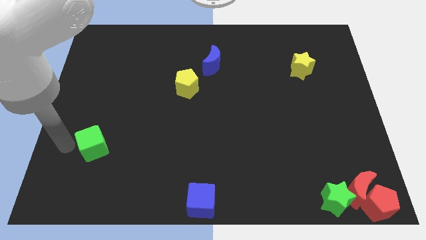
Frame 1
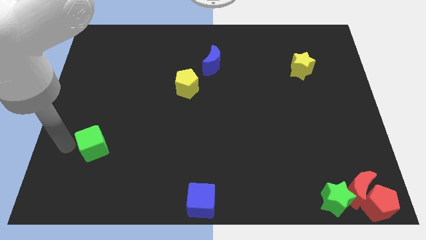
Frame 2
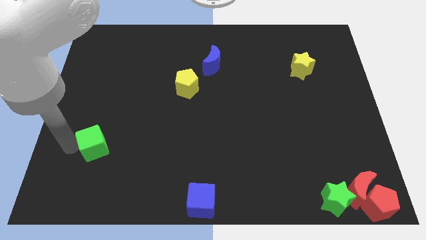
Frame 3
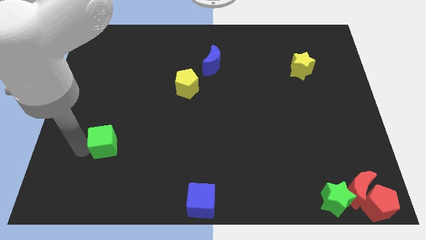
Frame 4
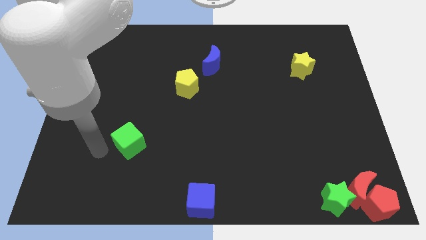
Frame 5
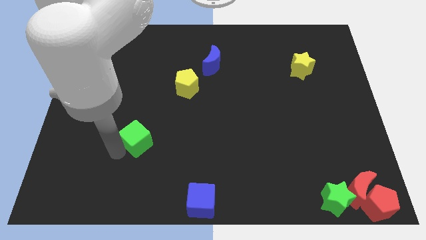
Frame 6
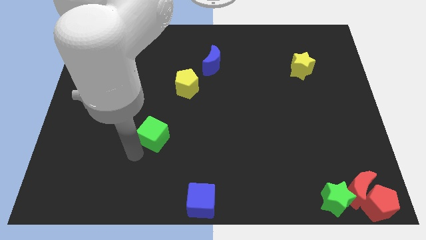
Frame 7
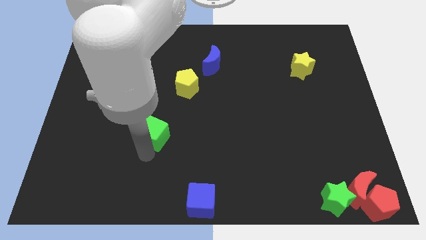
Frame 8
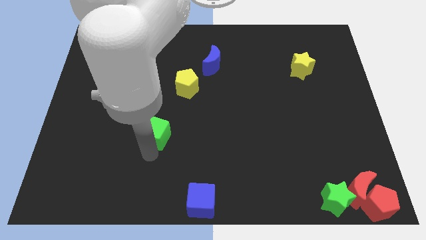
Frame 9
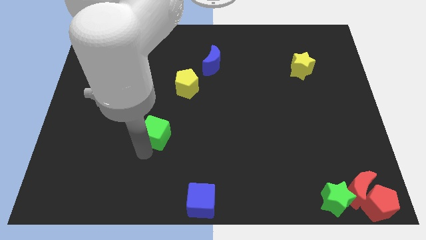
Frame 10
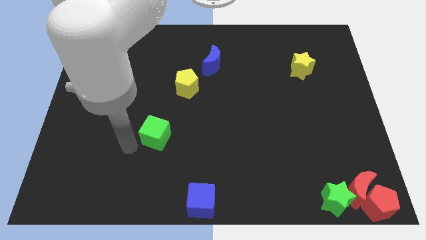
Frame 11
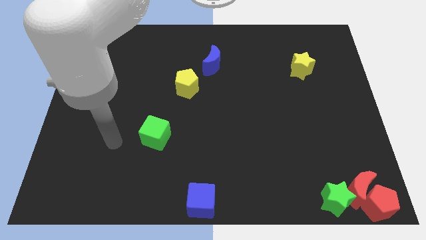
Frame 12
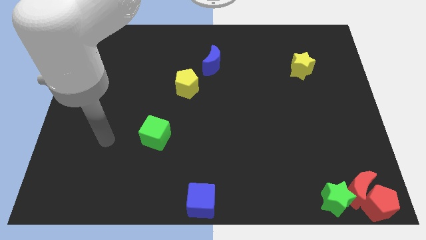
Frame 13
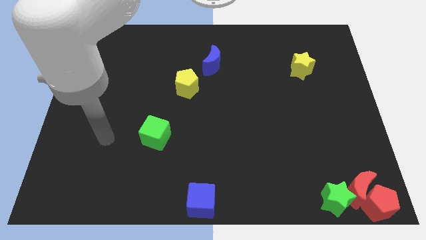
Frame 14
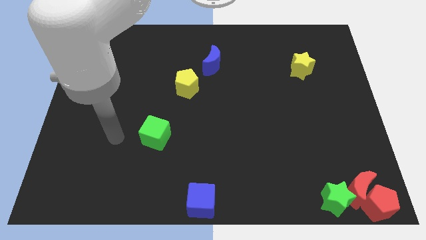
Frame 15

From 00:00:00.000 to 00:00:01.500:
push the green cube towards the right side of the board

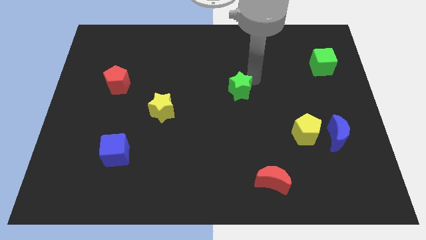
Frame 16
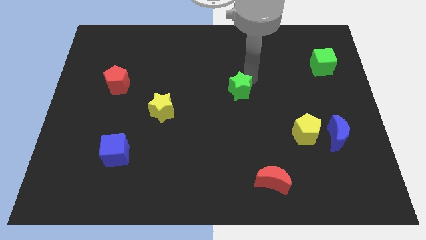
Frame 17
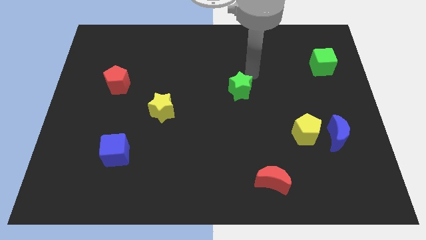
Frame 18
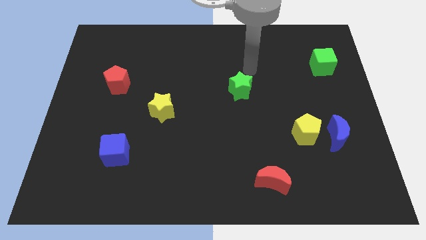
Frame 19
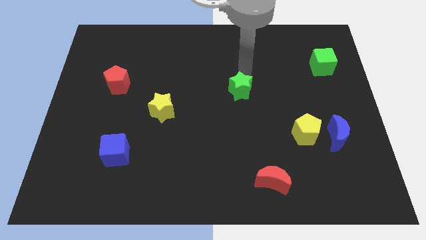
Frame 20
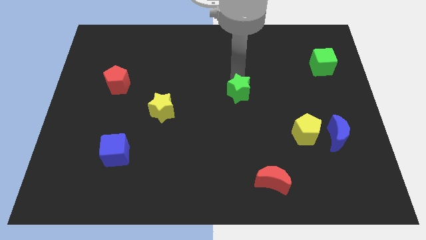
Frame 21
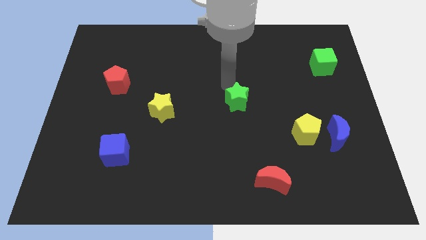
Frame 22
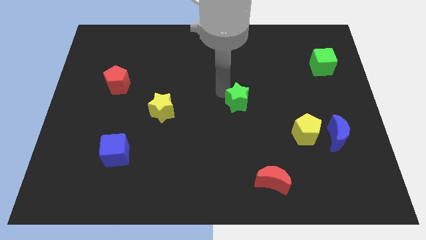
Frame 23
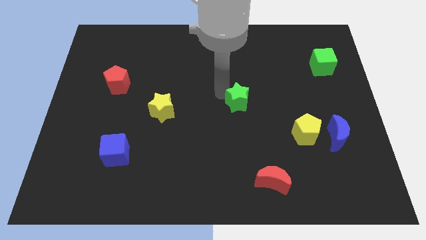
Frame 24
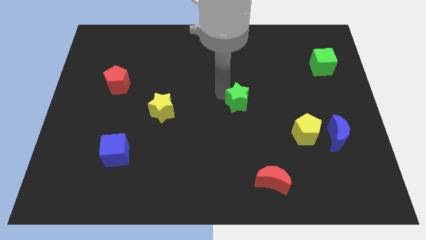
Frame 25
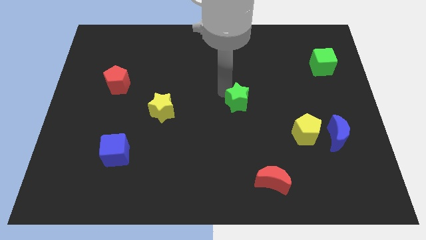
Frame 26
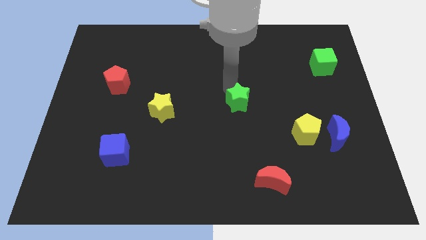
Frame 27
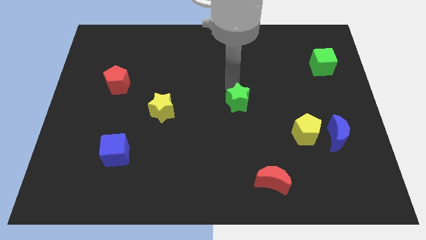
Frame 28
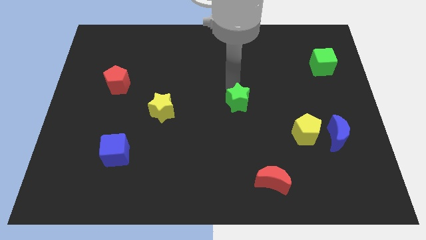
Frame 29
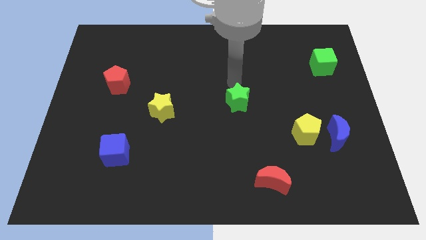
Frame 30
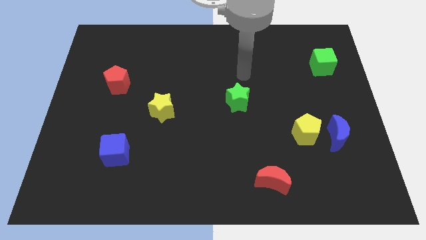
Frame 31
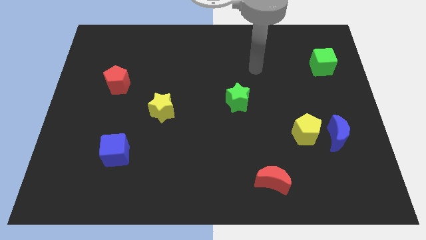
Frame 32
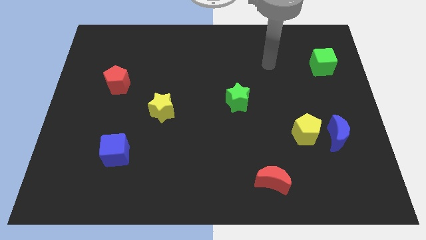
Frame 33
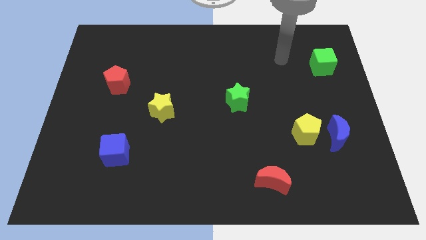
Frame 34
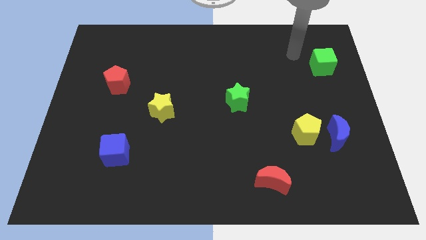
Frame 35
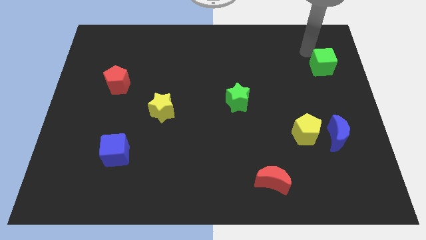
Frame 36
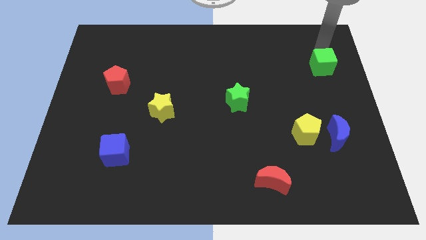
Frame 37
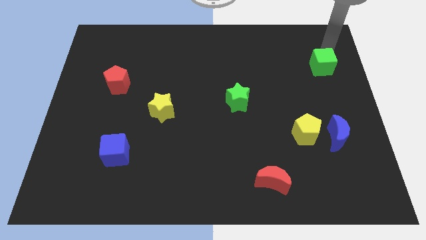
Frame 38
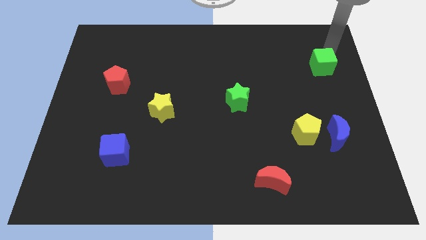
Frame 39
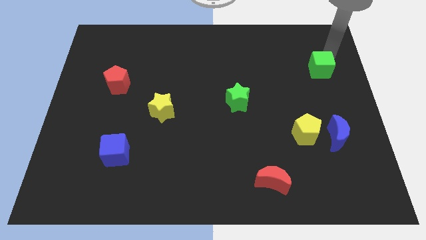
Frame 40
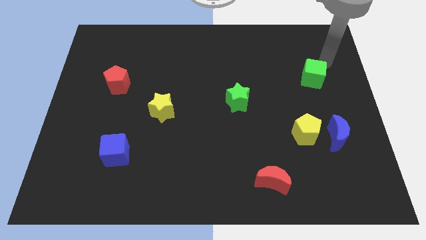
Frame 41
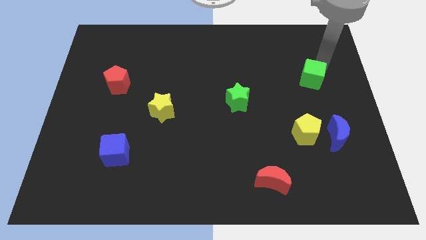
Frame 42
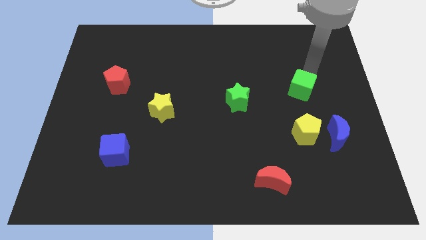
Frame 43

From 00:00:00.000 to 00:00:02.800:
place the green cube diagonally top left to the blue moon

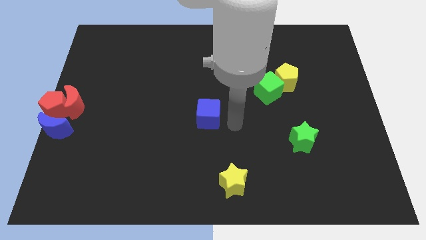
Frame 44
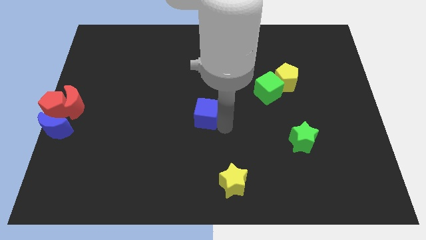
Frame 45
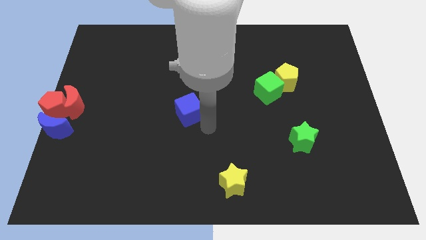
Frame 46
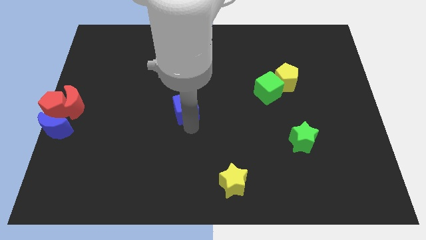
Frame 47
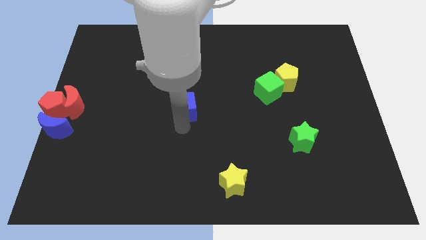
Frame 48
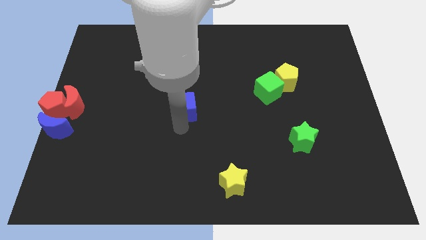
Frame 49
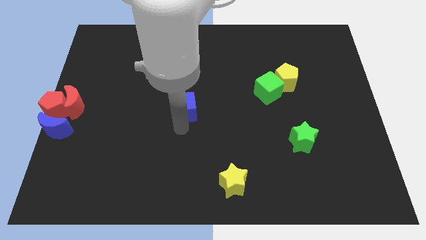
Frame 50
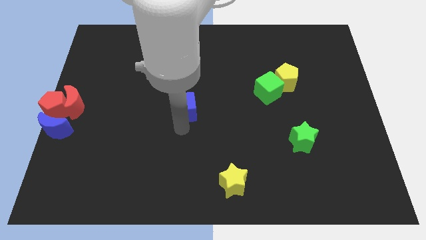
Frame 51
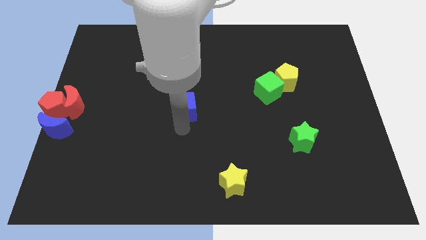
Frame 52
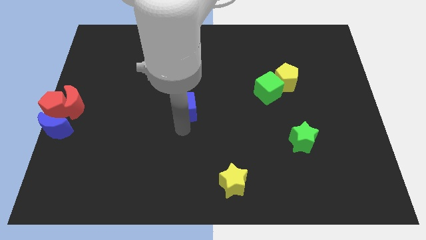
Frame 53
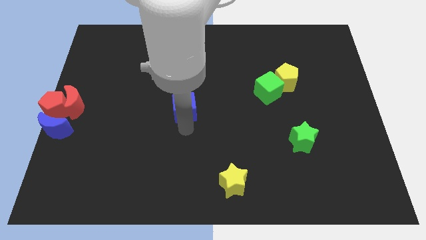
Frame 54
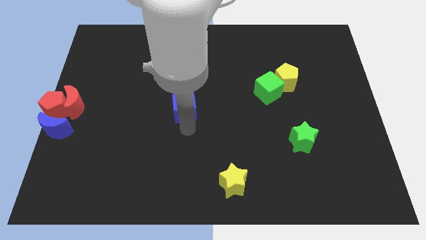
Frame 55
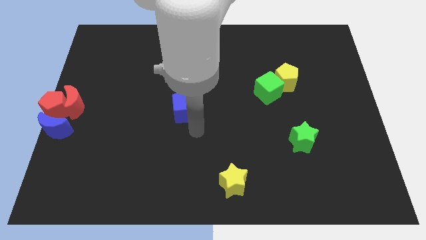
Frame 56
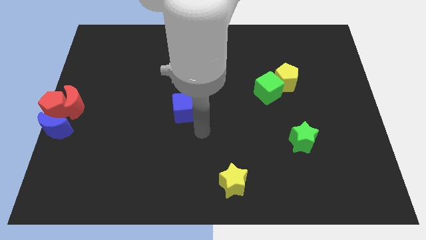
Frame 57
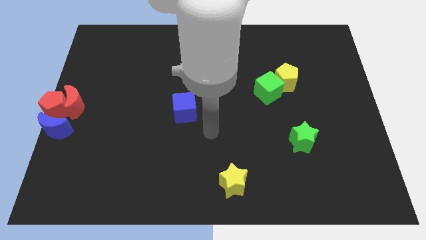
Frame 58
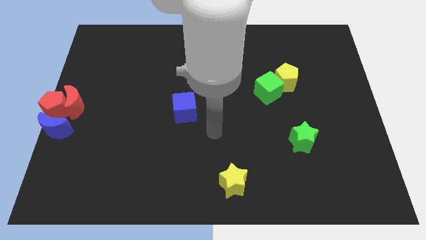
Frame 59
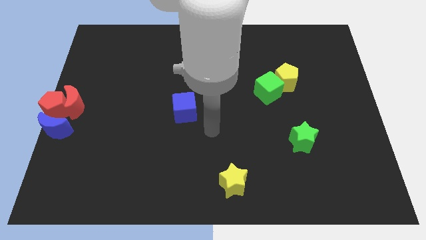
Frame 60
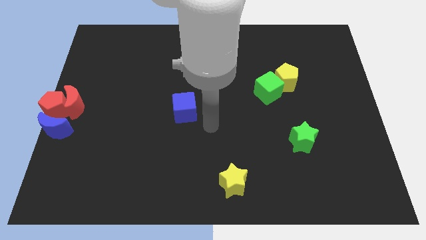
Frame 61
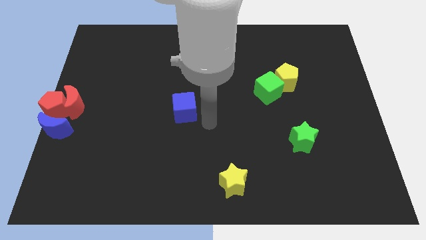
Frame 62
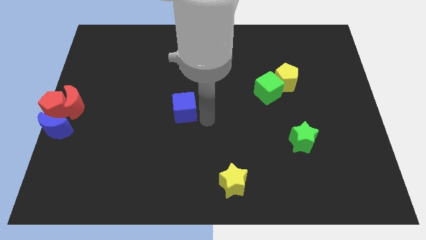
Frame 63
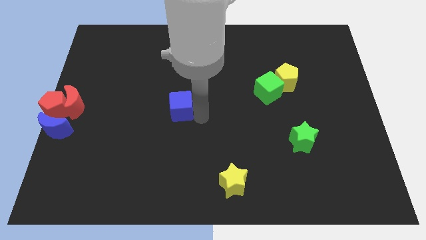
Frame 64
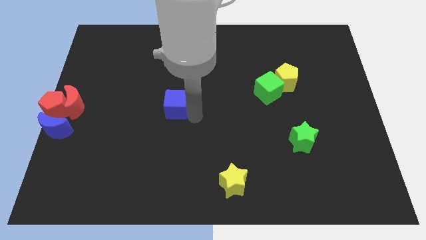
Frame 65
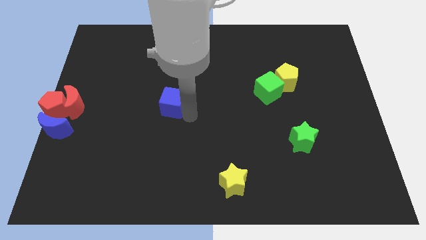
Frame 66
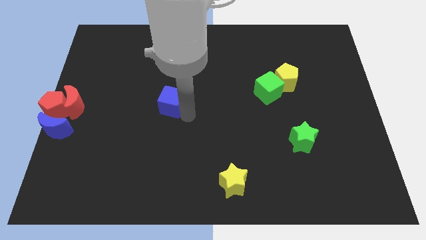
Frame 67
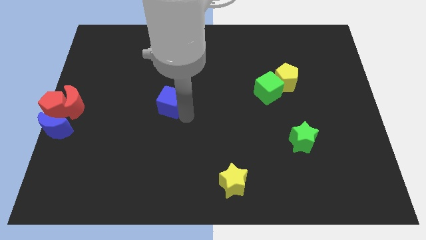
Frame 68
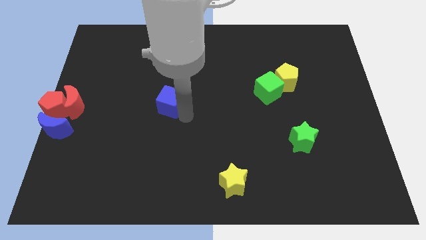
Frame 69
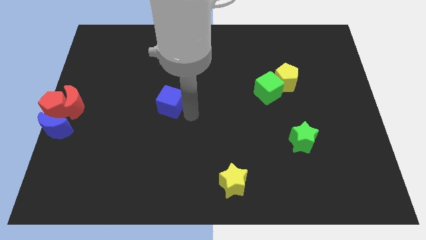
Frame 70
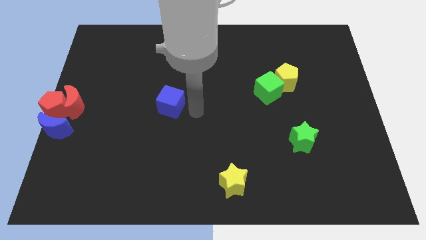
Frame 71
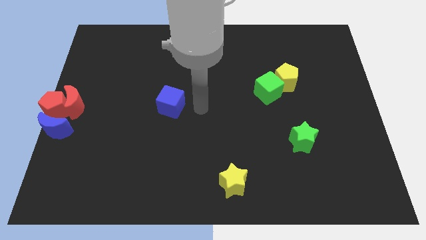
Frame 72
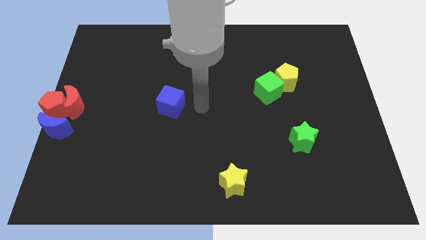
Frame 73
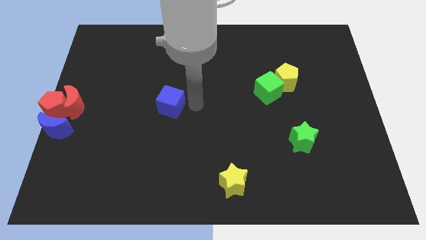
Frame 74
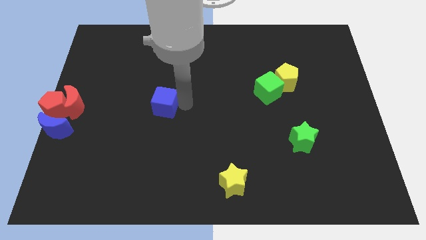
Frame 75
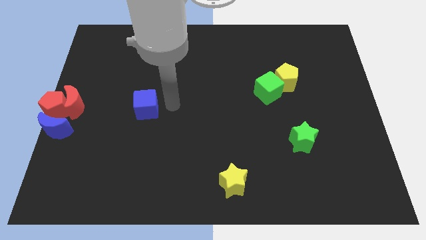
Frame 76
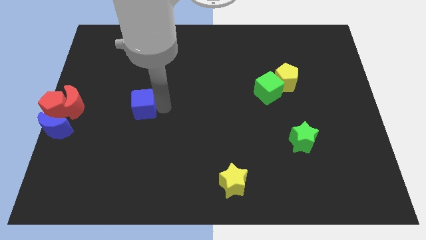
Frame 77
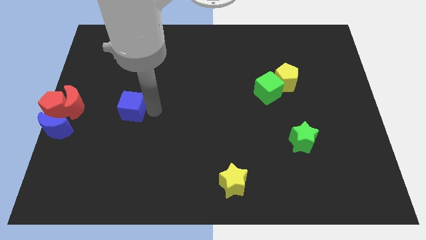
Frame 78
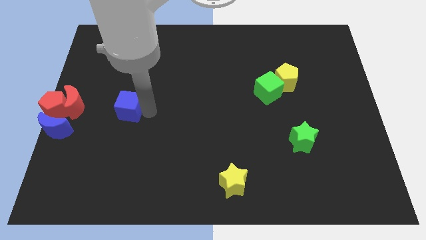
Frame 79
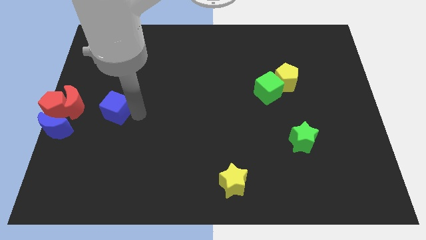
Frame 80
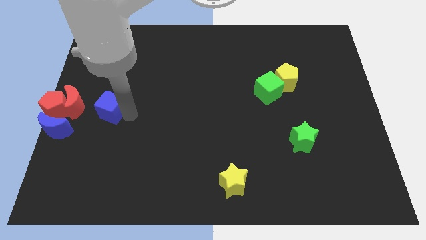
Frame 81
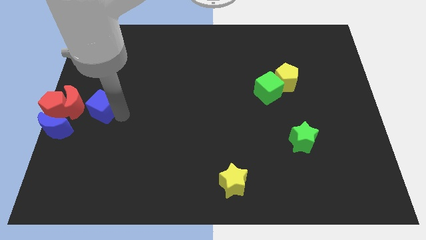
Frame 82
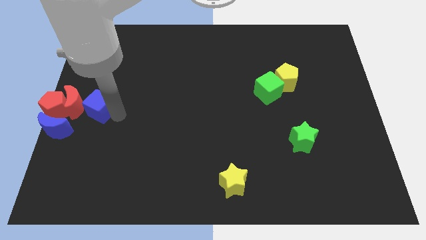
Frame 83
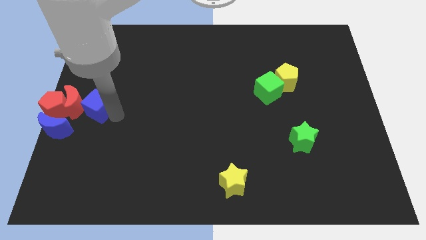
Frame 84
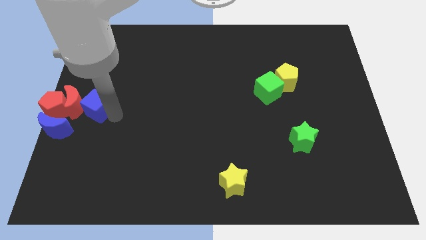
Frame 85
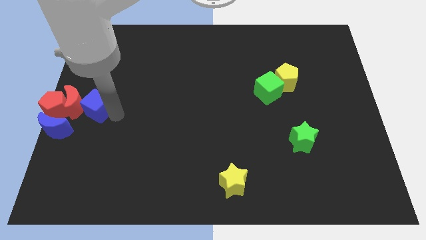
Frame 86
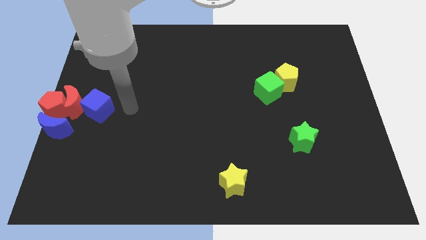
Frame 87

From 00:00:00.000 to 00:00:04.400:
place blue cube to the right of the red crescent
